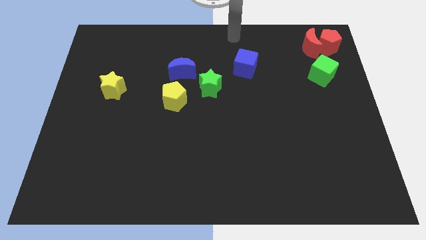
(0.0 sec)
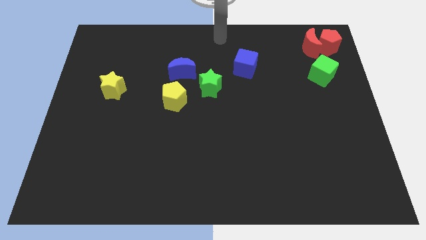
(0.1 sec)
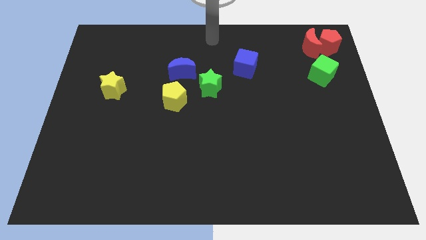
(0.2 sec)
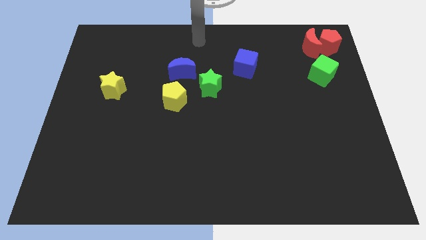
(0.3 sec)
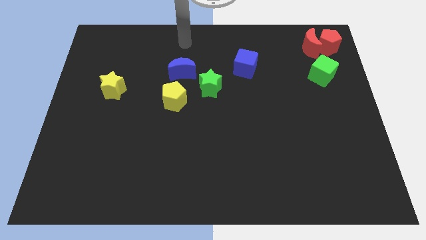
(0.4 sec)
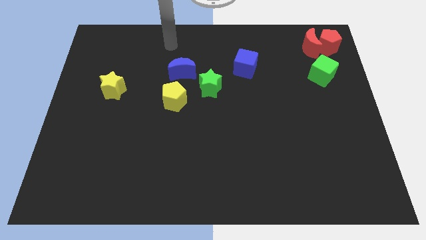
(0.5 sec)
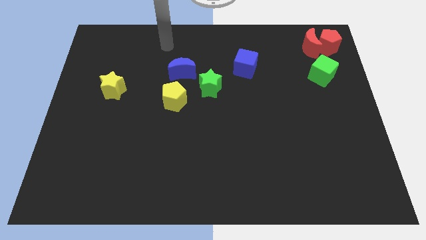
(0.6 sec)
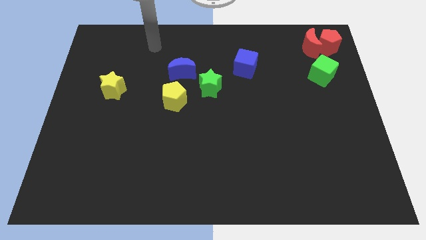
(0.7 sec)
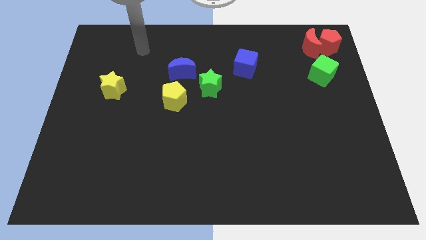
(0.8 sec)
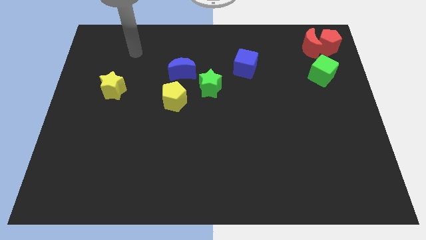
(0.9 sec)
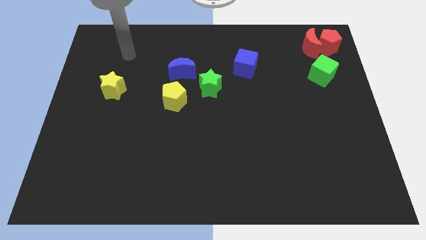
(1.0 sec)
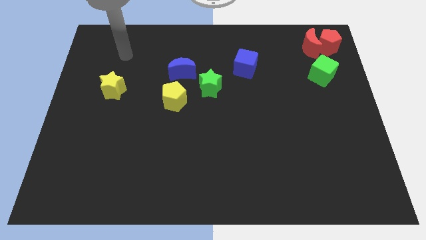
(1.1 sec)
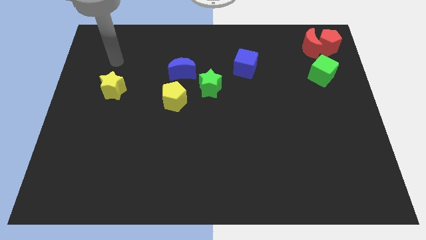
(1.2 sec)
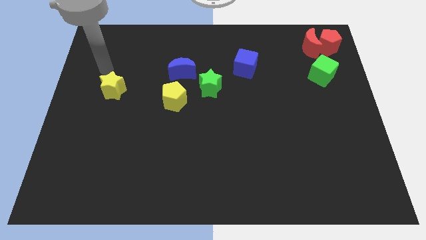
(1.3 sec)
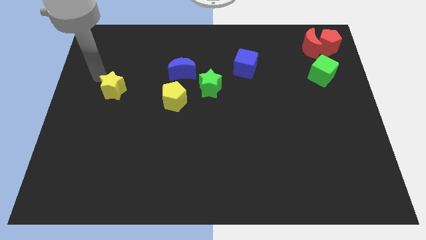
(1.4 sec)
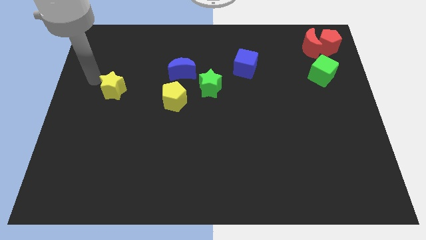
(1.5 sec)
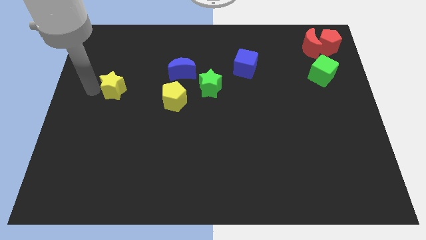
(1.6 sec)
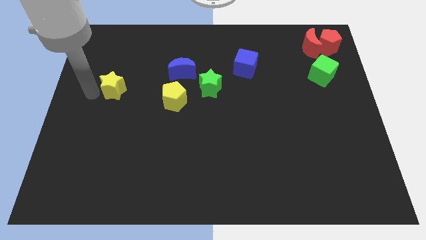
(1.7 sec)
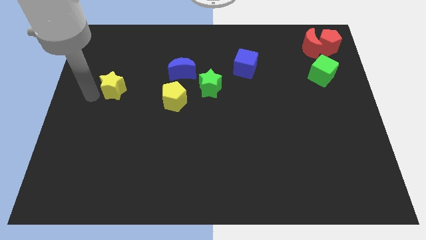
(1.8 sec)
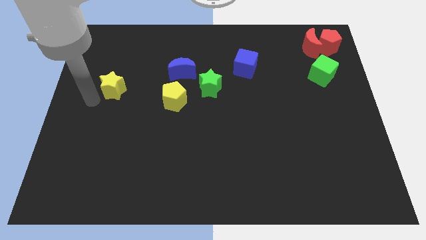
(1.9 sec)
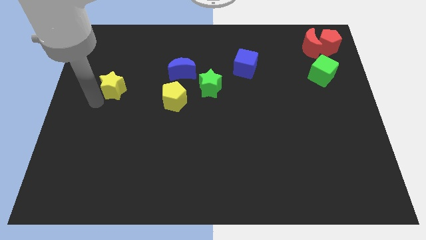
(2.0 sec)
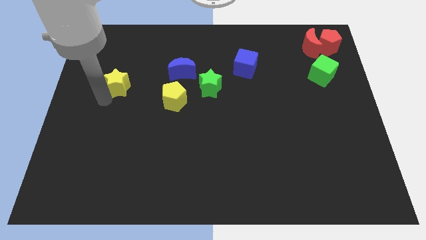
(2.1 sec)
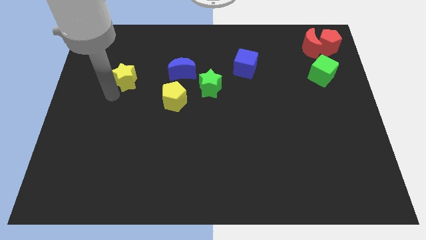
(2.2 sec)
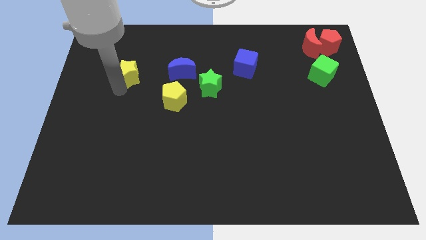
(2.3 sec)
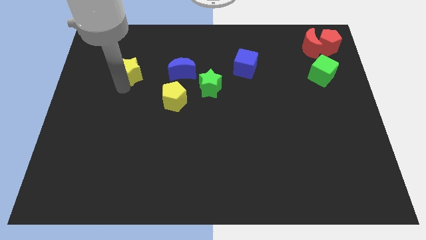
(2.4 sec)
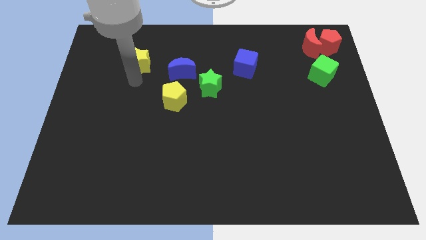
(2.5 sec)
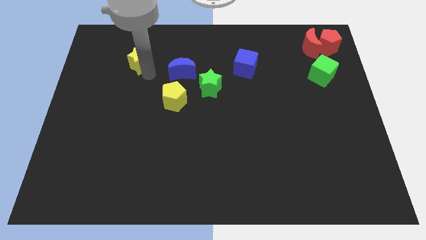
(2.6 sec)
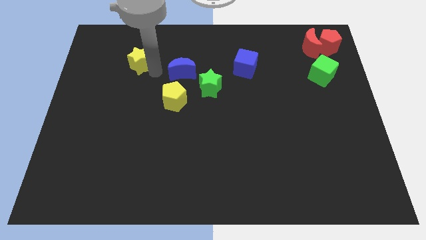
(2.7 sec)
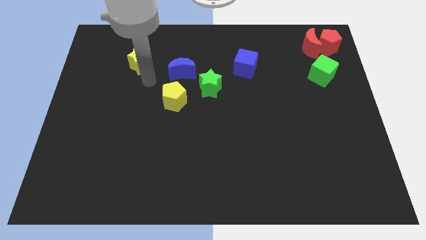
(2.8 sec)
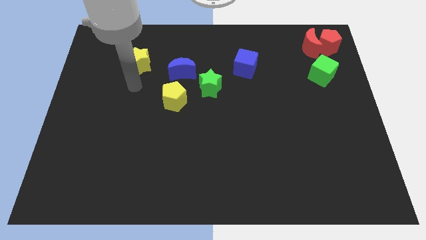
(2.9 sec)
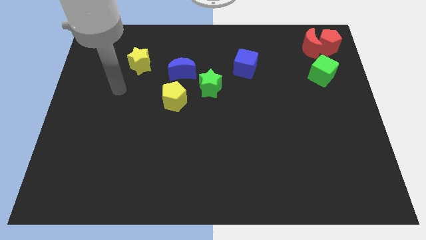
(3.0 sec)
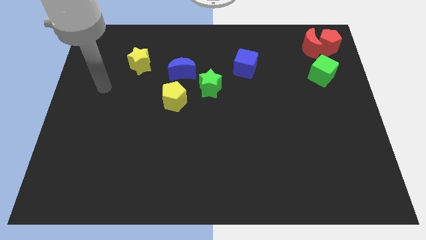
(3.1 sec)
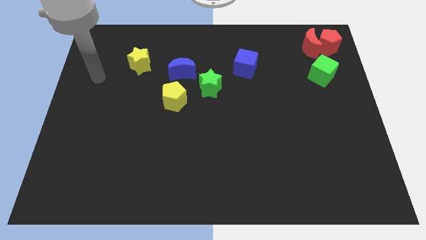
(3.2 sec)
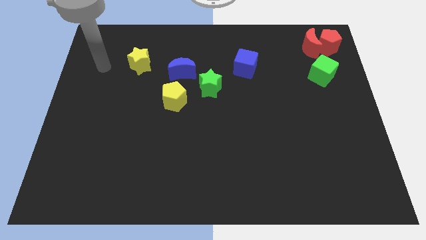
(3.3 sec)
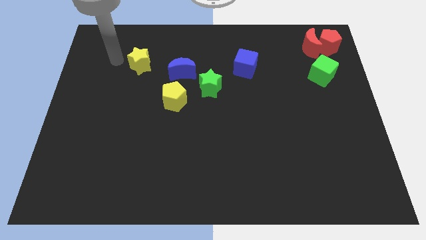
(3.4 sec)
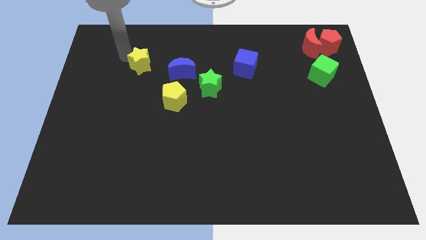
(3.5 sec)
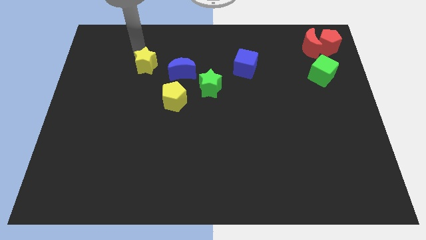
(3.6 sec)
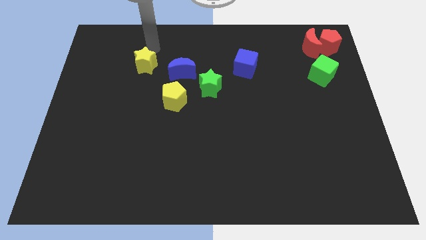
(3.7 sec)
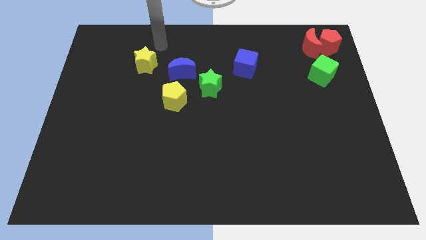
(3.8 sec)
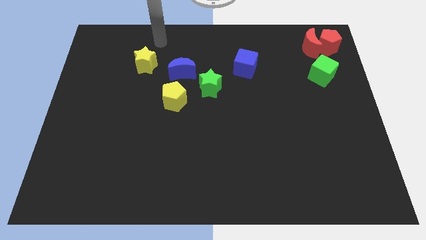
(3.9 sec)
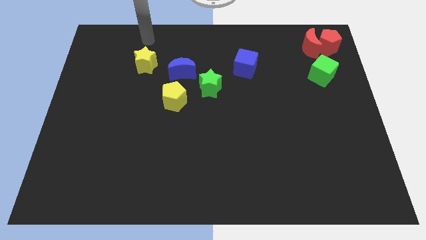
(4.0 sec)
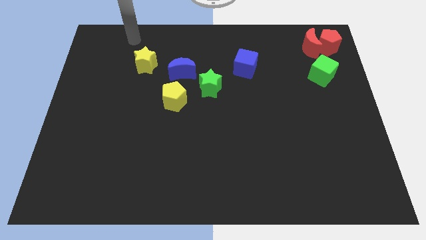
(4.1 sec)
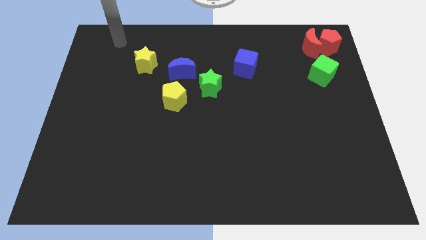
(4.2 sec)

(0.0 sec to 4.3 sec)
move the yellow star to the left of blue moon

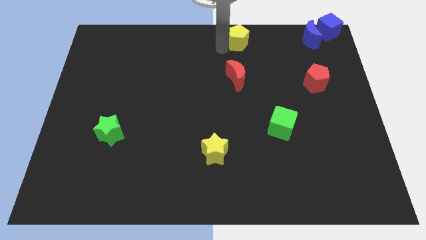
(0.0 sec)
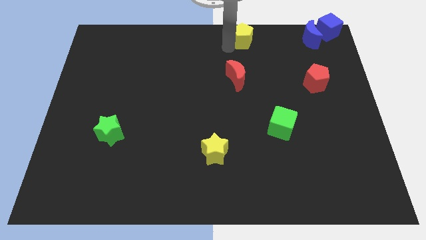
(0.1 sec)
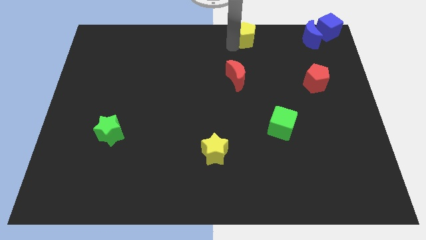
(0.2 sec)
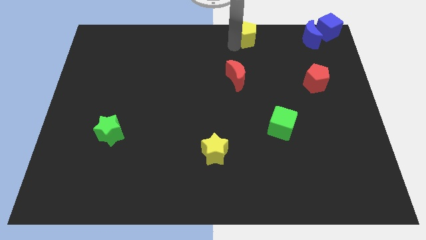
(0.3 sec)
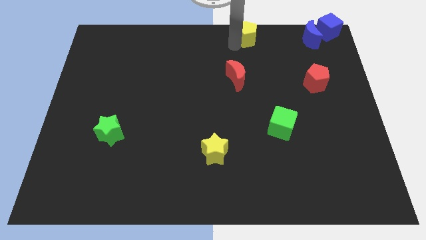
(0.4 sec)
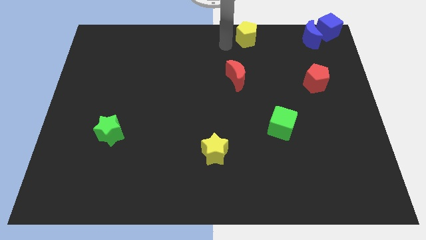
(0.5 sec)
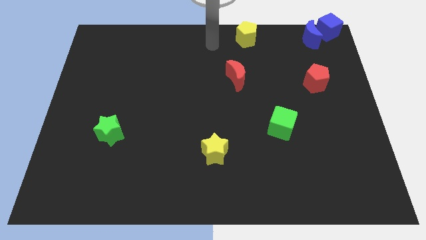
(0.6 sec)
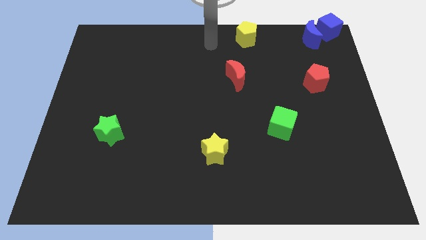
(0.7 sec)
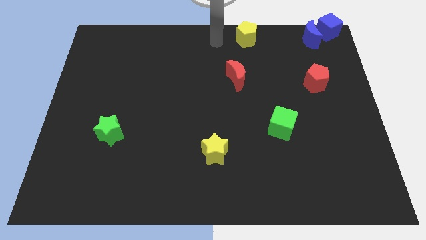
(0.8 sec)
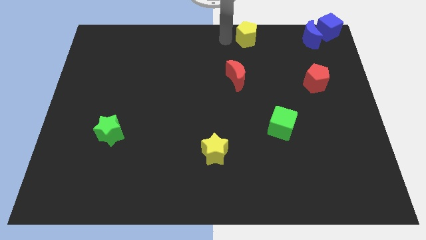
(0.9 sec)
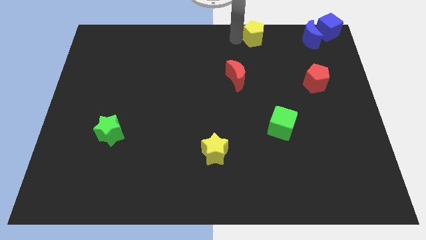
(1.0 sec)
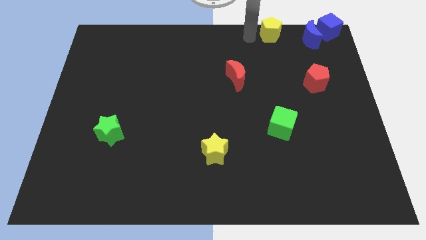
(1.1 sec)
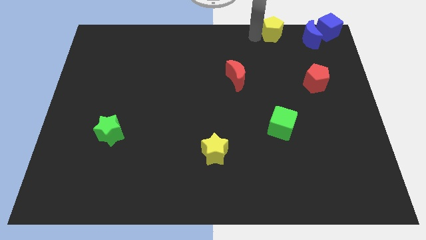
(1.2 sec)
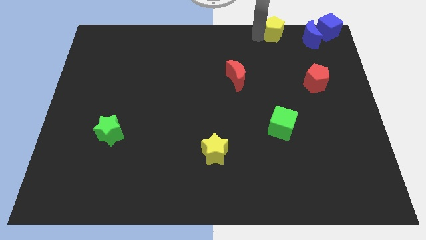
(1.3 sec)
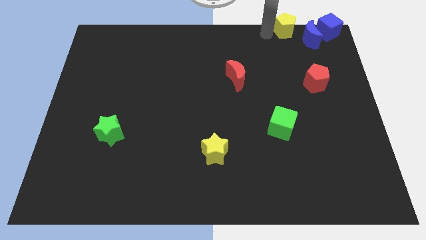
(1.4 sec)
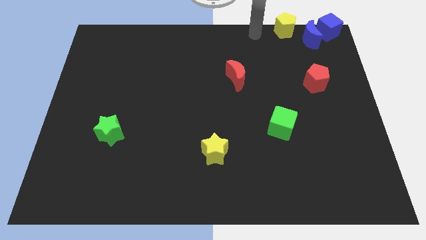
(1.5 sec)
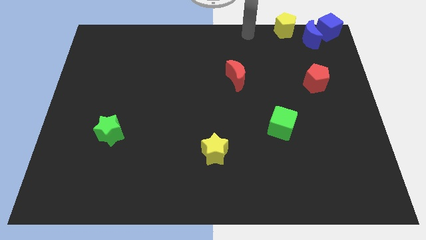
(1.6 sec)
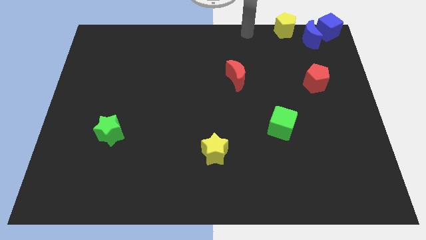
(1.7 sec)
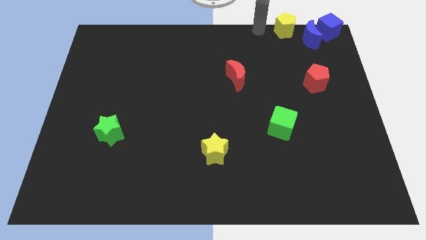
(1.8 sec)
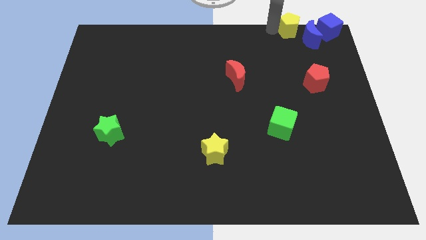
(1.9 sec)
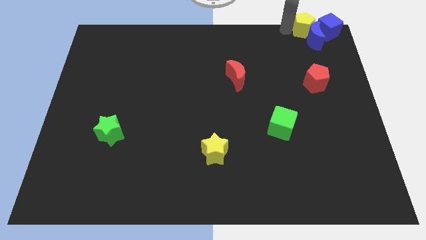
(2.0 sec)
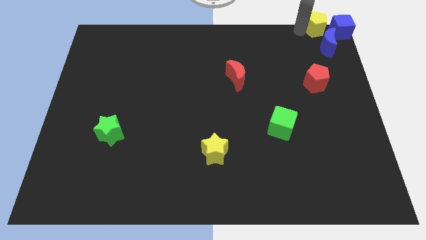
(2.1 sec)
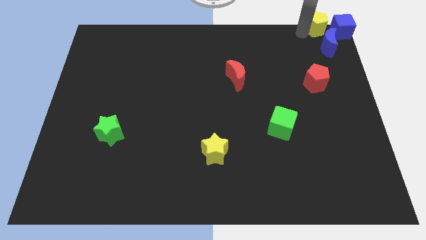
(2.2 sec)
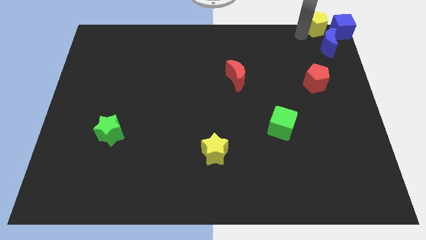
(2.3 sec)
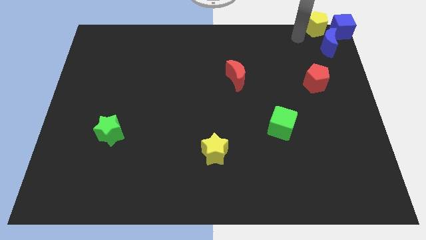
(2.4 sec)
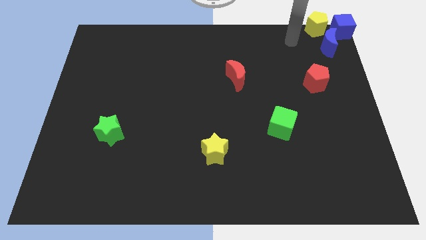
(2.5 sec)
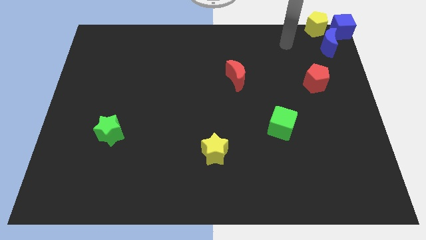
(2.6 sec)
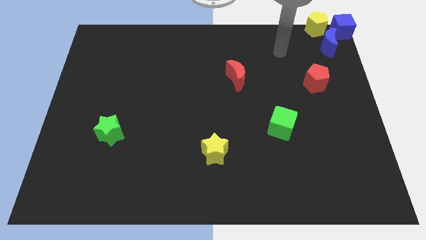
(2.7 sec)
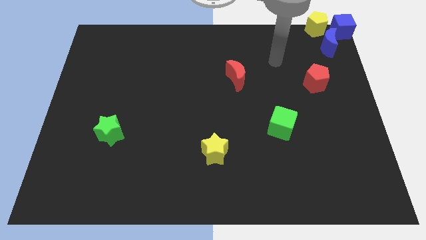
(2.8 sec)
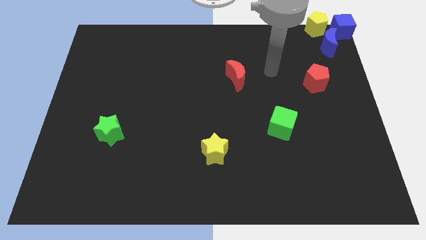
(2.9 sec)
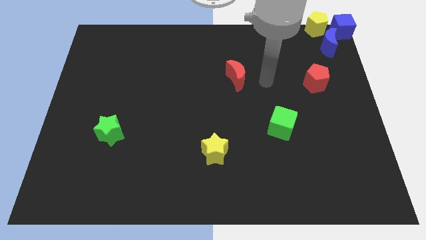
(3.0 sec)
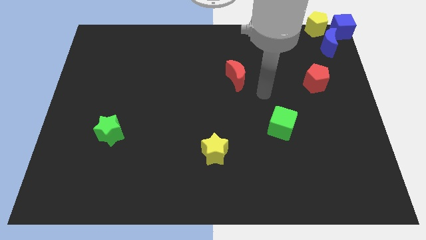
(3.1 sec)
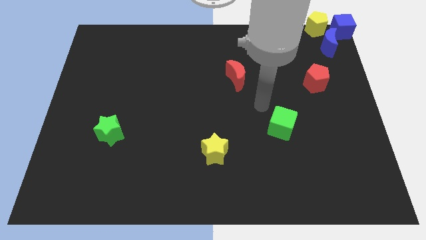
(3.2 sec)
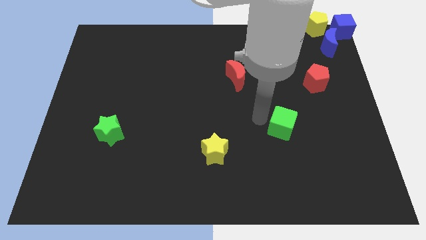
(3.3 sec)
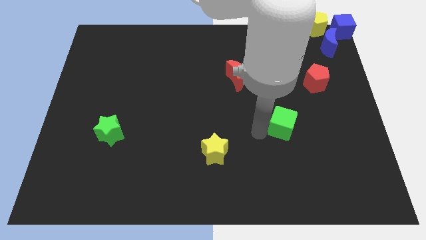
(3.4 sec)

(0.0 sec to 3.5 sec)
push the yellow pentagon to the top right corner of the board

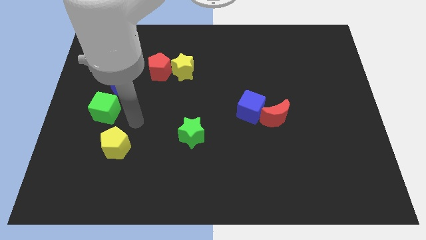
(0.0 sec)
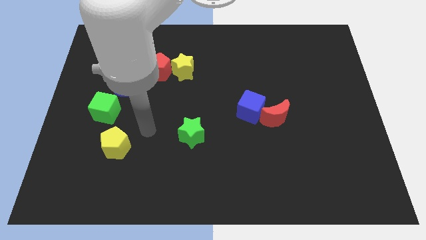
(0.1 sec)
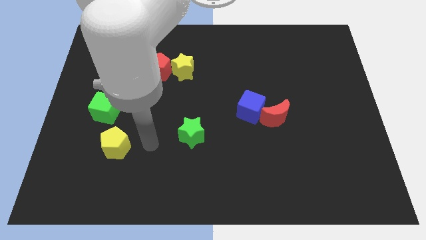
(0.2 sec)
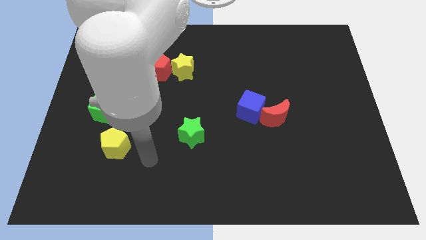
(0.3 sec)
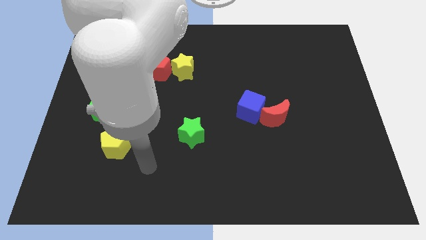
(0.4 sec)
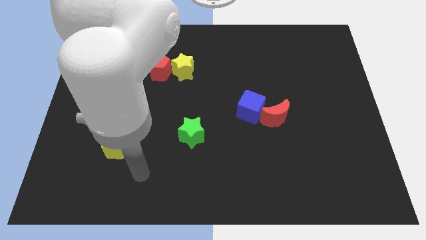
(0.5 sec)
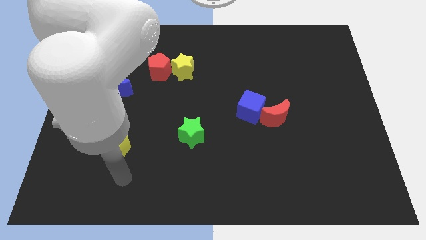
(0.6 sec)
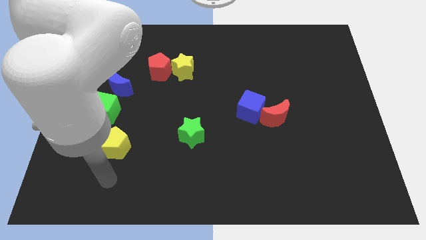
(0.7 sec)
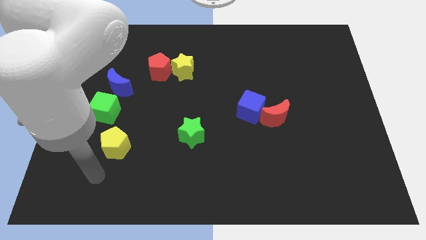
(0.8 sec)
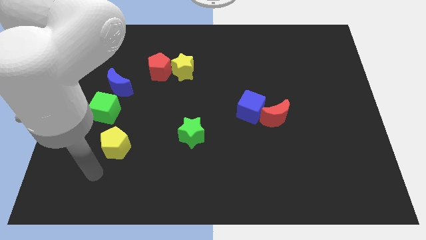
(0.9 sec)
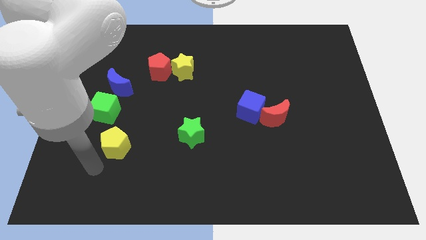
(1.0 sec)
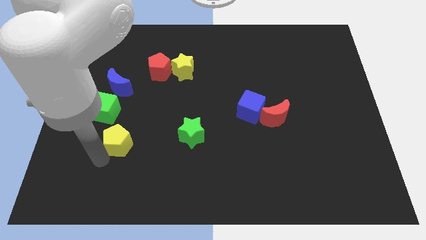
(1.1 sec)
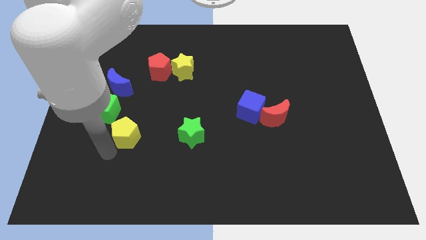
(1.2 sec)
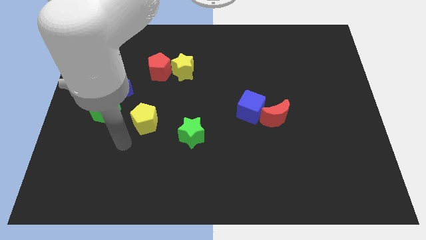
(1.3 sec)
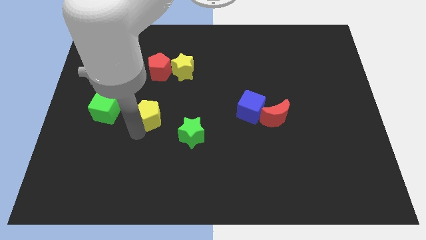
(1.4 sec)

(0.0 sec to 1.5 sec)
put the yellow pentagon between the green blocks
